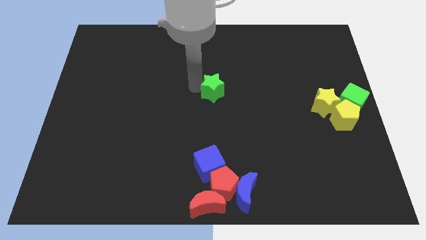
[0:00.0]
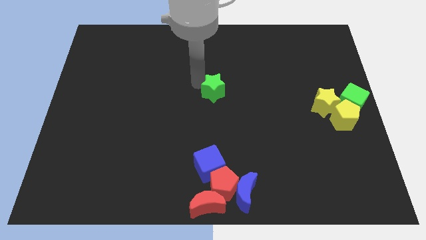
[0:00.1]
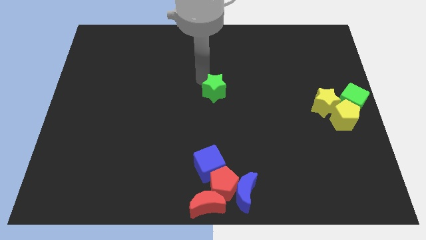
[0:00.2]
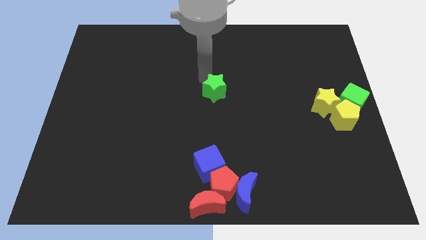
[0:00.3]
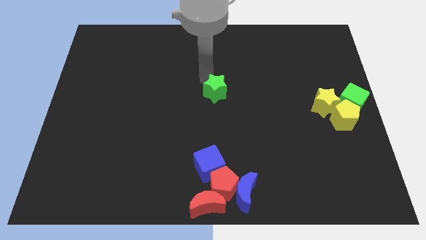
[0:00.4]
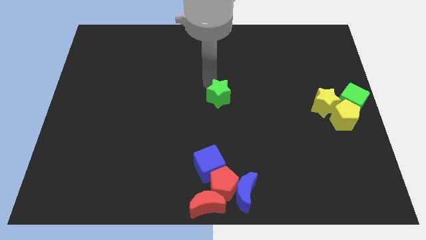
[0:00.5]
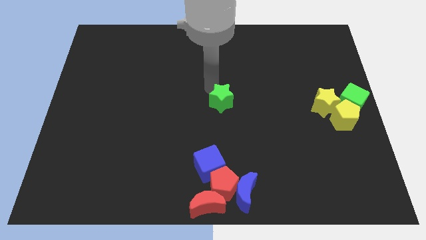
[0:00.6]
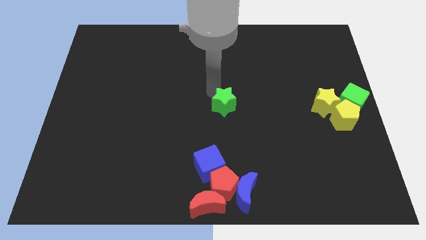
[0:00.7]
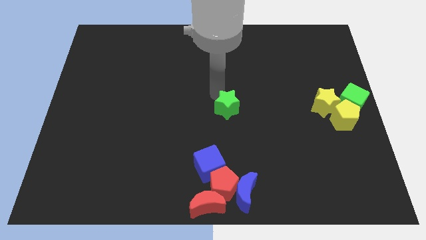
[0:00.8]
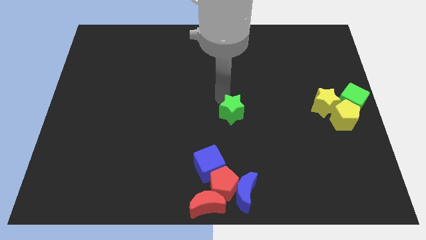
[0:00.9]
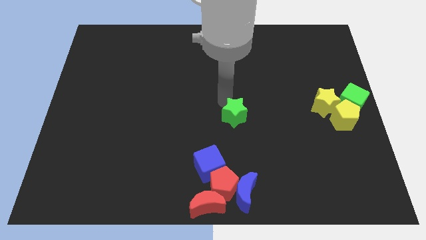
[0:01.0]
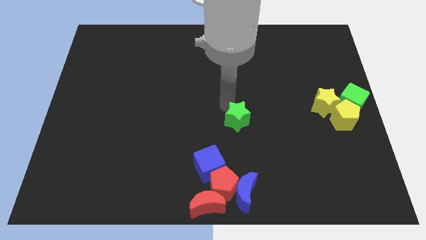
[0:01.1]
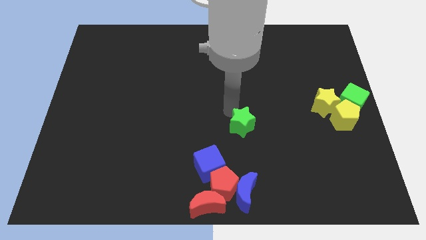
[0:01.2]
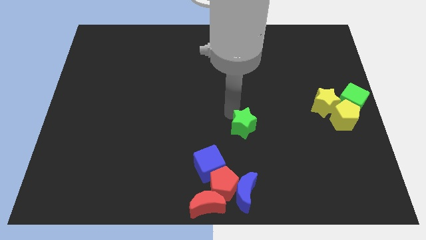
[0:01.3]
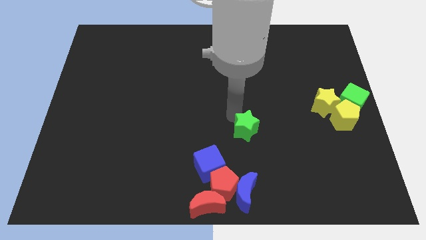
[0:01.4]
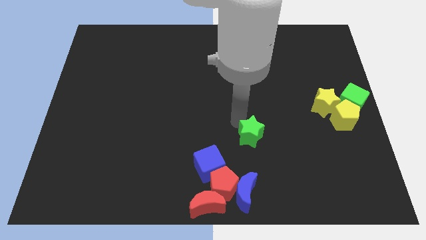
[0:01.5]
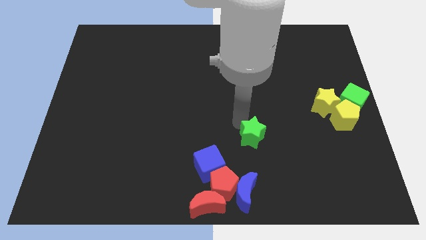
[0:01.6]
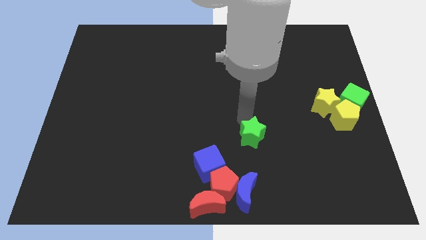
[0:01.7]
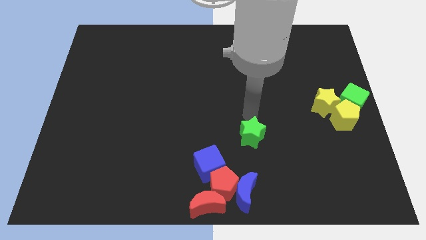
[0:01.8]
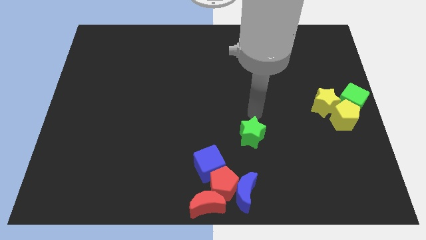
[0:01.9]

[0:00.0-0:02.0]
move the green star parallel to the top of blue crescent

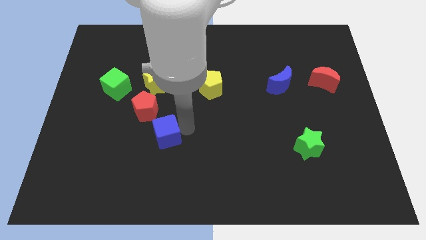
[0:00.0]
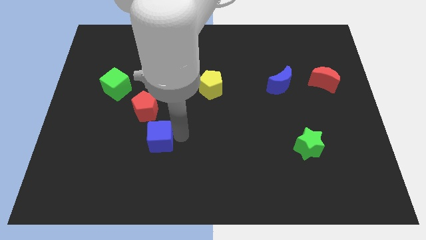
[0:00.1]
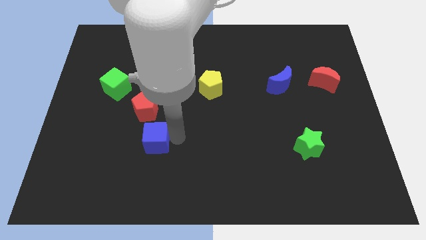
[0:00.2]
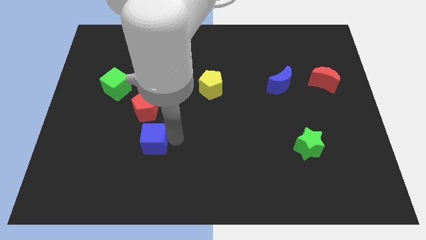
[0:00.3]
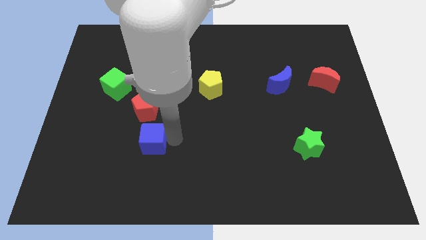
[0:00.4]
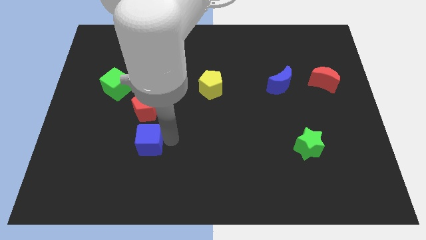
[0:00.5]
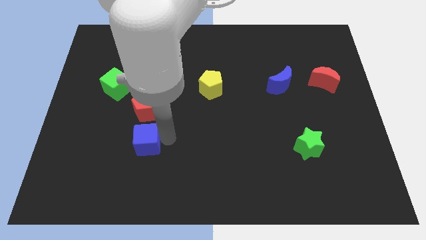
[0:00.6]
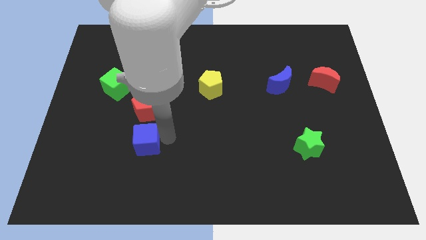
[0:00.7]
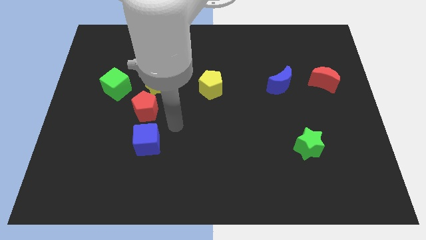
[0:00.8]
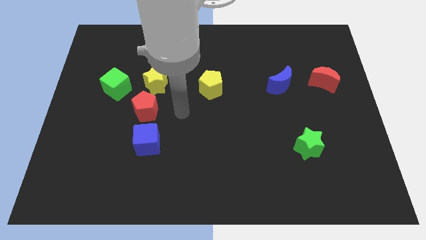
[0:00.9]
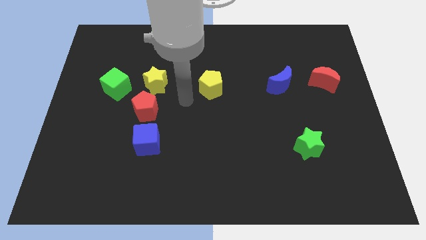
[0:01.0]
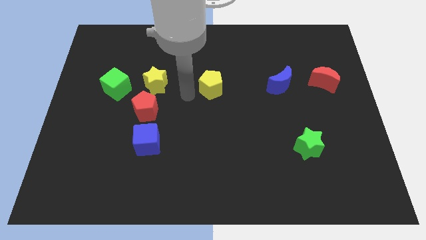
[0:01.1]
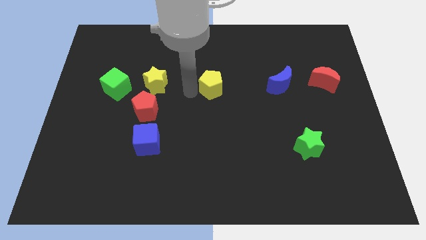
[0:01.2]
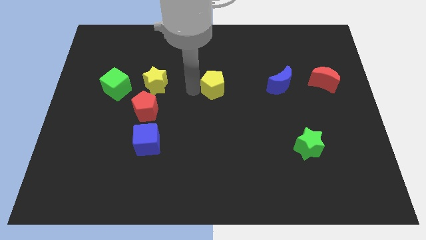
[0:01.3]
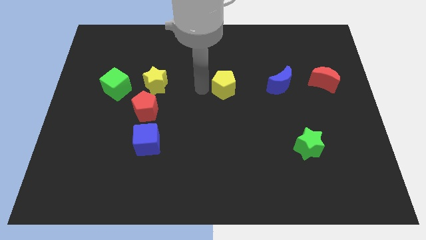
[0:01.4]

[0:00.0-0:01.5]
place the arm in between the yellow blocks

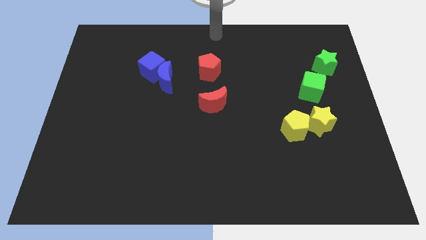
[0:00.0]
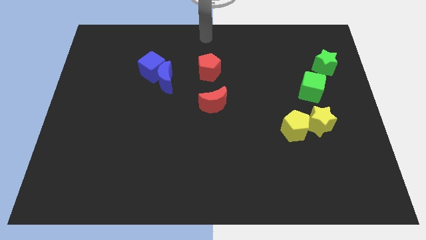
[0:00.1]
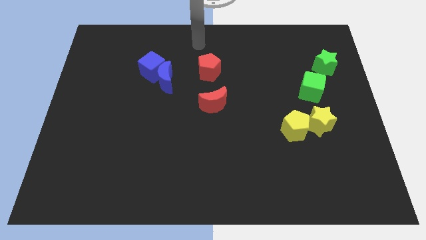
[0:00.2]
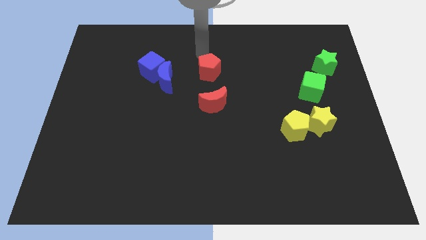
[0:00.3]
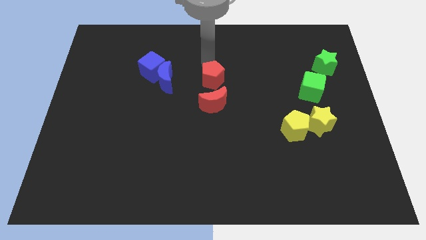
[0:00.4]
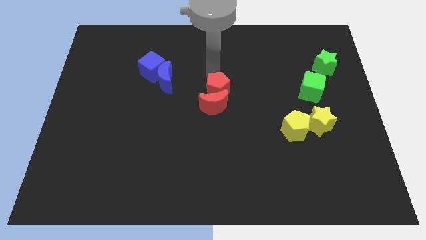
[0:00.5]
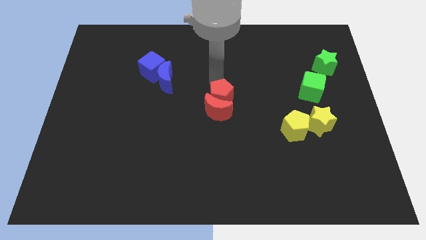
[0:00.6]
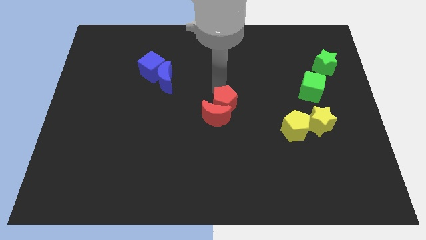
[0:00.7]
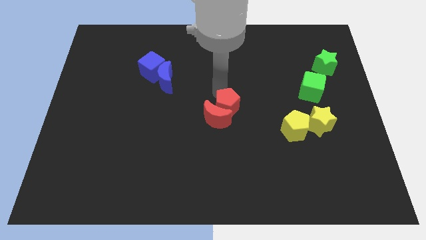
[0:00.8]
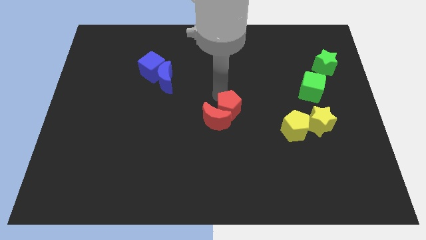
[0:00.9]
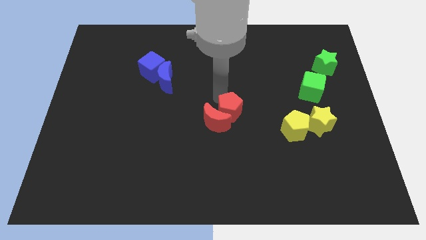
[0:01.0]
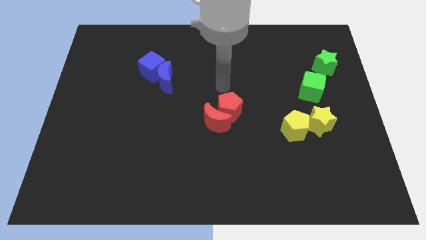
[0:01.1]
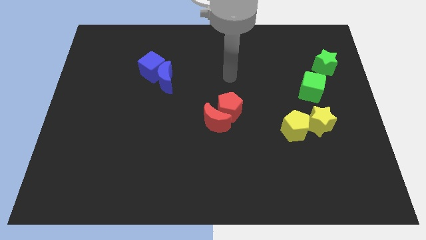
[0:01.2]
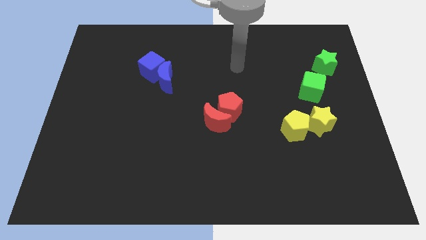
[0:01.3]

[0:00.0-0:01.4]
put the red pentagon to the top right side of the red moon

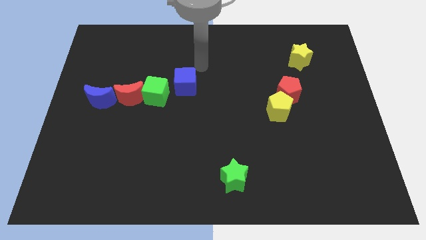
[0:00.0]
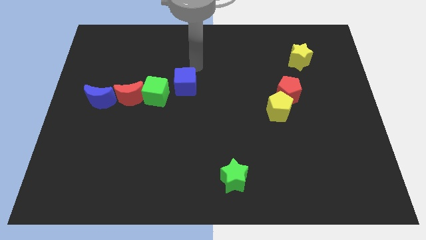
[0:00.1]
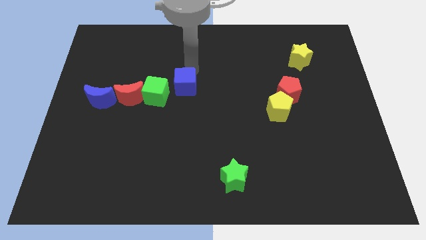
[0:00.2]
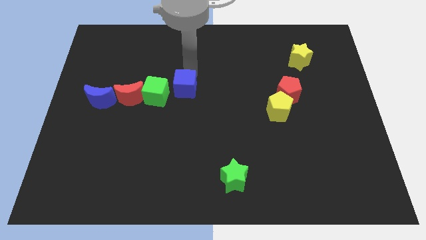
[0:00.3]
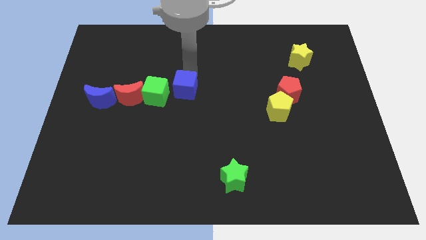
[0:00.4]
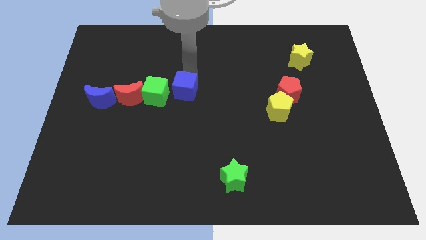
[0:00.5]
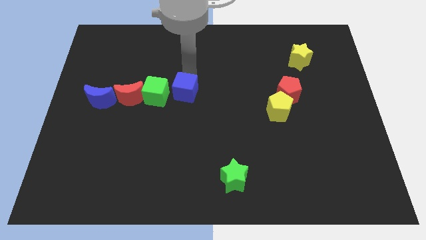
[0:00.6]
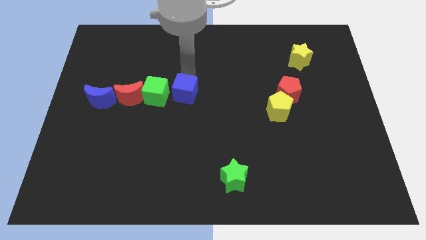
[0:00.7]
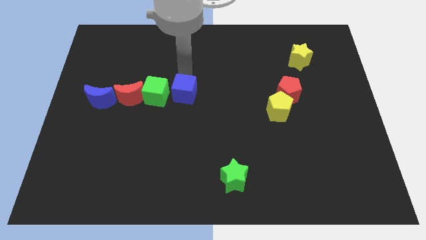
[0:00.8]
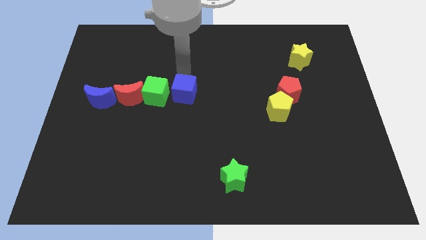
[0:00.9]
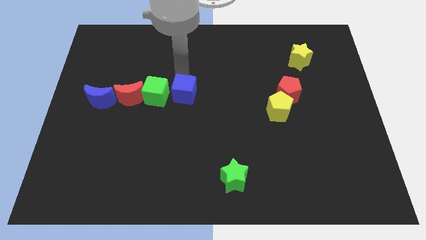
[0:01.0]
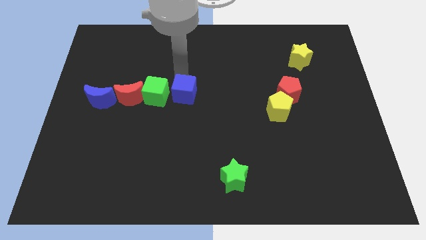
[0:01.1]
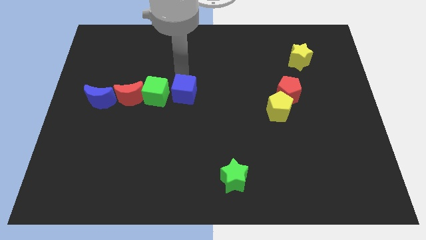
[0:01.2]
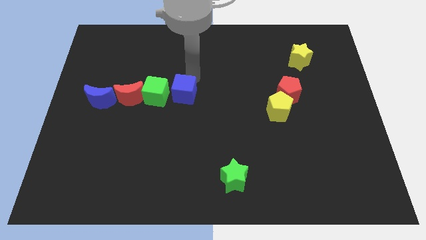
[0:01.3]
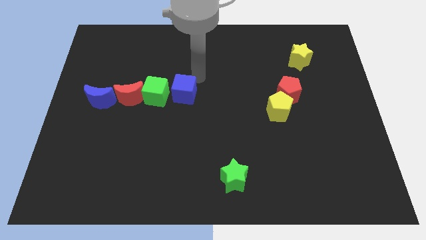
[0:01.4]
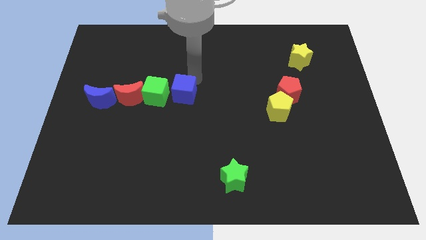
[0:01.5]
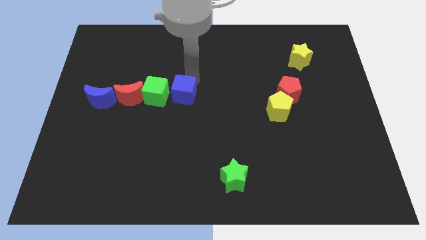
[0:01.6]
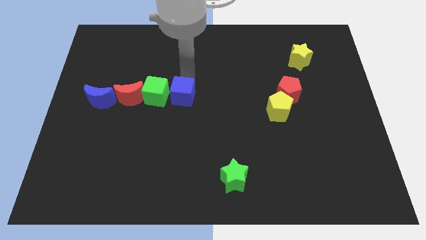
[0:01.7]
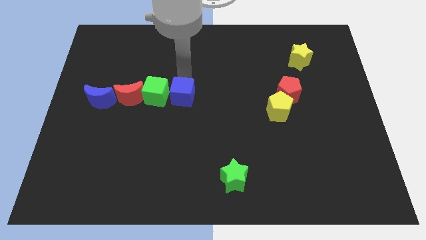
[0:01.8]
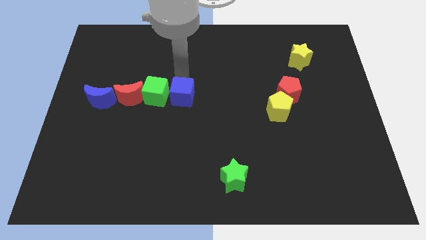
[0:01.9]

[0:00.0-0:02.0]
place the blue cube to the right of the green cube

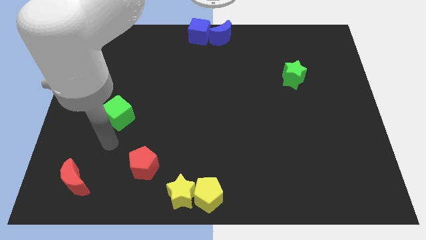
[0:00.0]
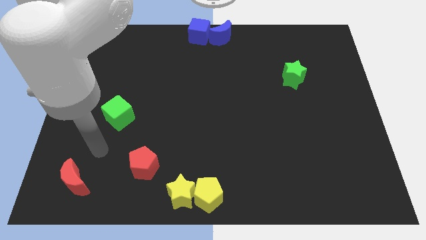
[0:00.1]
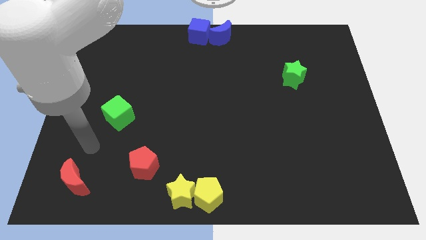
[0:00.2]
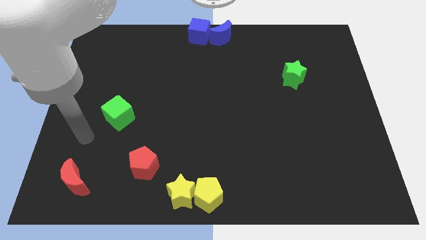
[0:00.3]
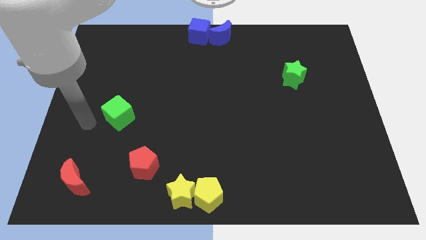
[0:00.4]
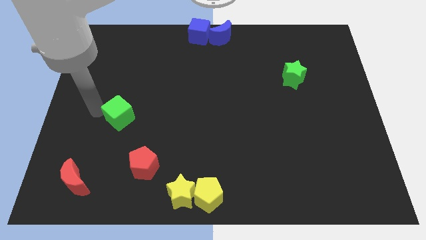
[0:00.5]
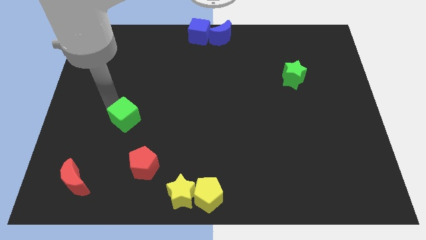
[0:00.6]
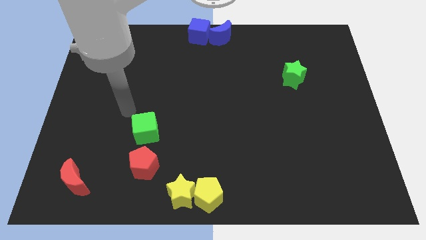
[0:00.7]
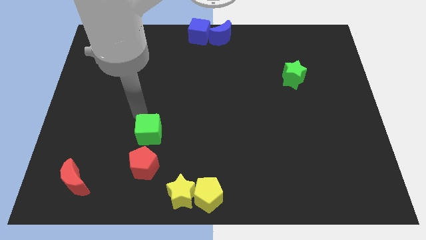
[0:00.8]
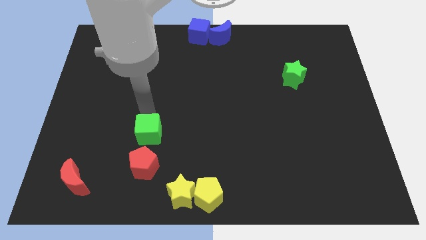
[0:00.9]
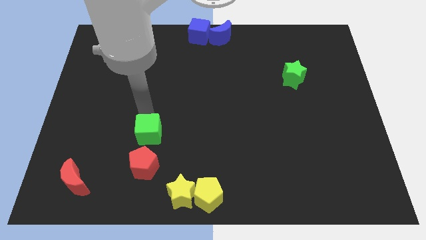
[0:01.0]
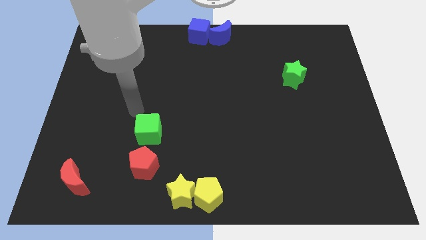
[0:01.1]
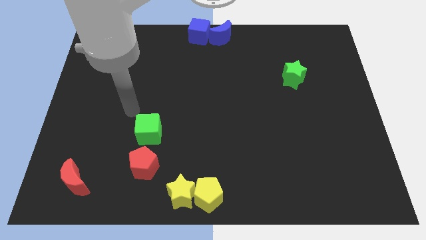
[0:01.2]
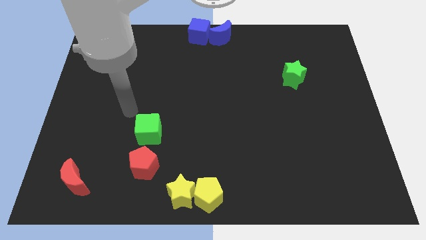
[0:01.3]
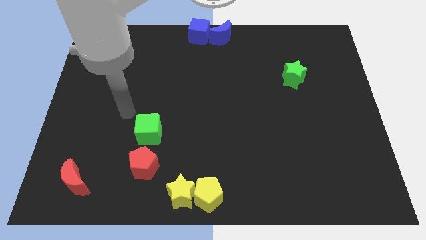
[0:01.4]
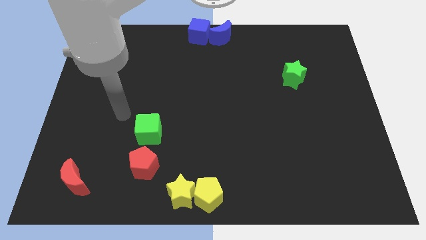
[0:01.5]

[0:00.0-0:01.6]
place the green cube above the red pentagon

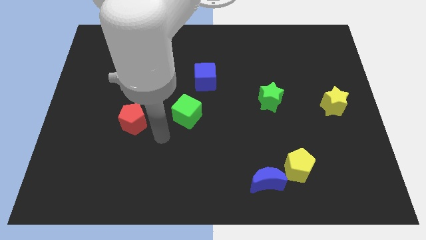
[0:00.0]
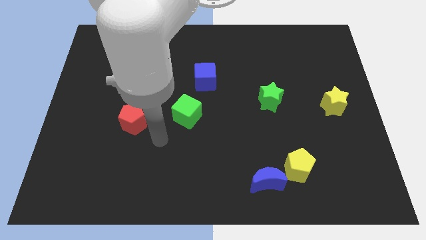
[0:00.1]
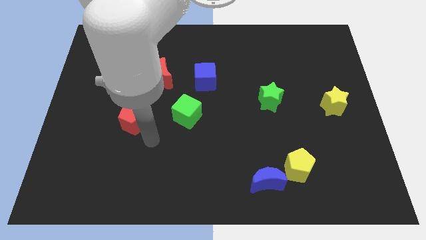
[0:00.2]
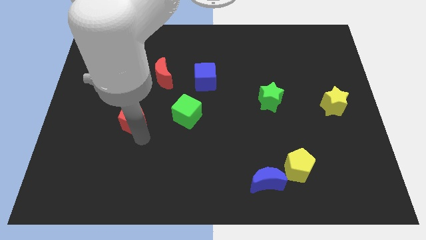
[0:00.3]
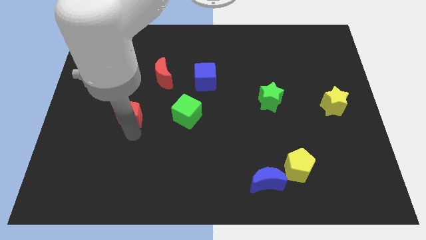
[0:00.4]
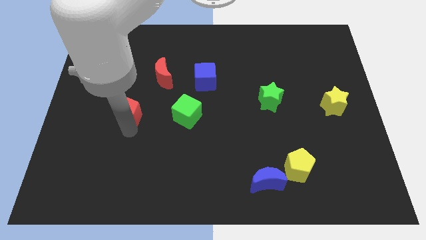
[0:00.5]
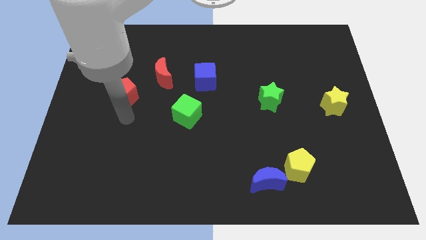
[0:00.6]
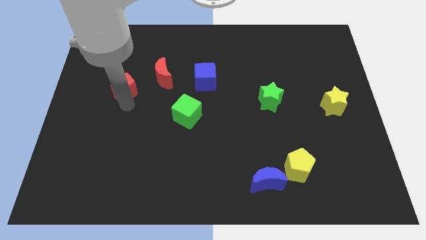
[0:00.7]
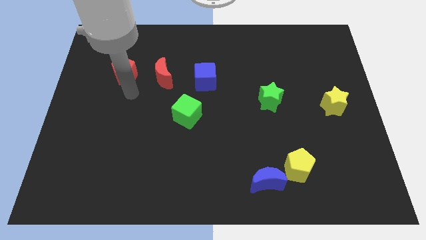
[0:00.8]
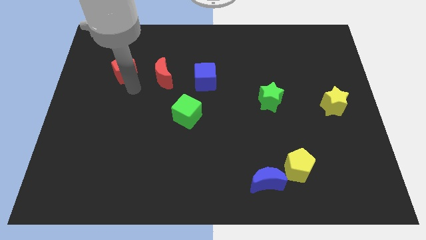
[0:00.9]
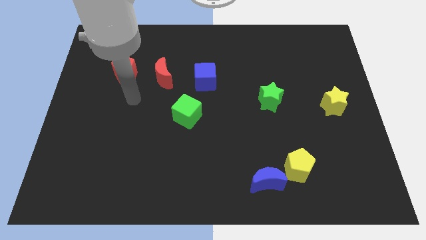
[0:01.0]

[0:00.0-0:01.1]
move the red pentagon to the left of red crescent
